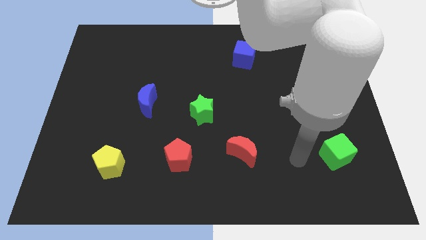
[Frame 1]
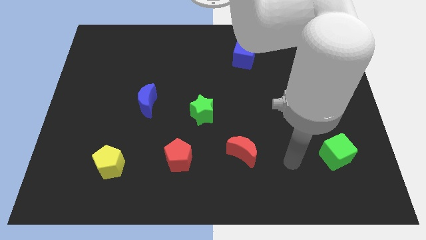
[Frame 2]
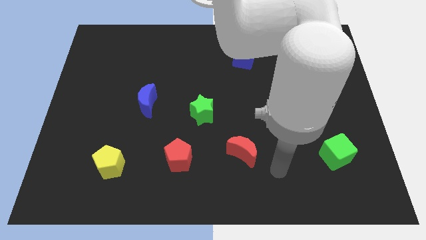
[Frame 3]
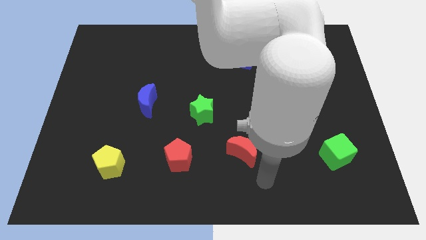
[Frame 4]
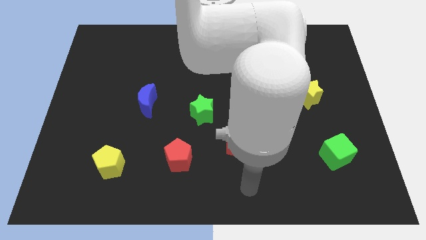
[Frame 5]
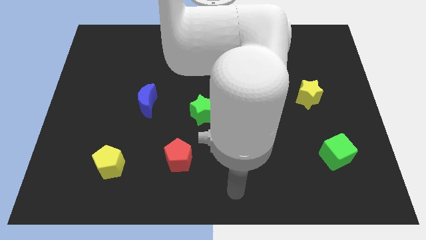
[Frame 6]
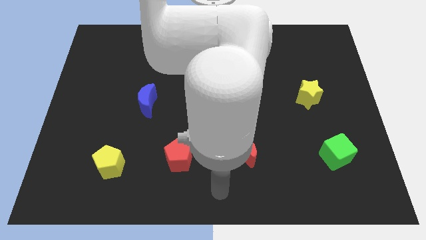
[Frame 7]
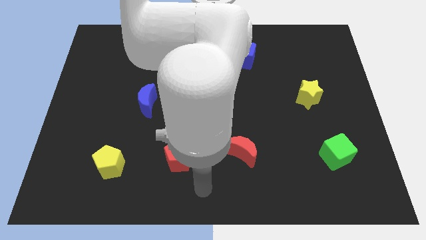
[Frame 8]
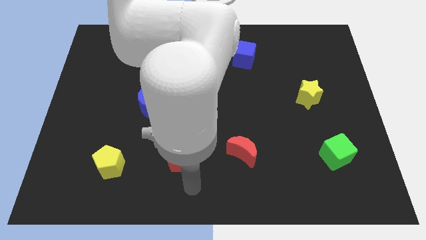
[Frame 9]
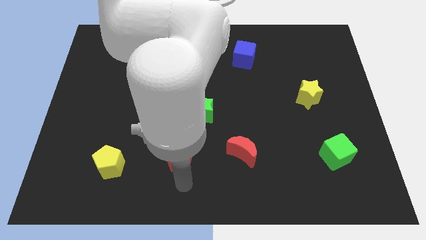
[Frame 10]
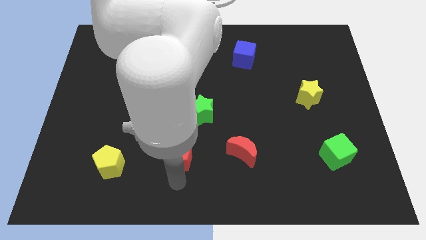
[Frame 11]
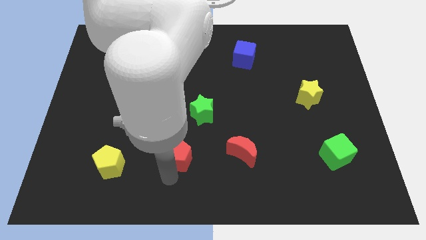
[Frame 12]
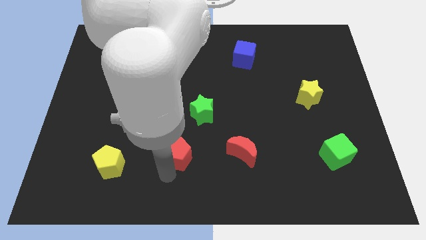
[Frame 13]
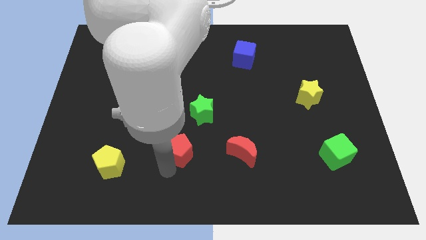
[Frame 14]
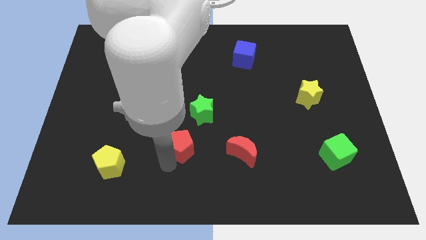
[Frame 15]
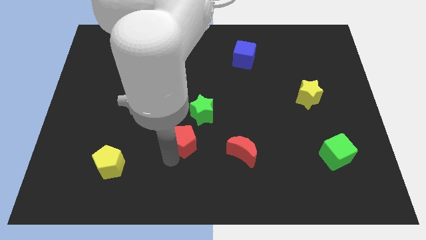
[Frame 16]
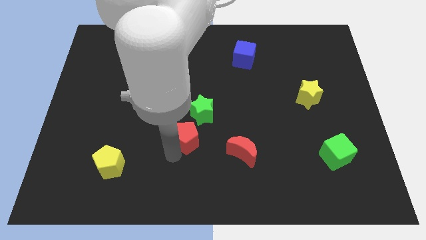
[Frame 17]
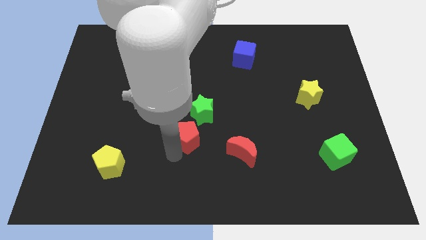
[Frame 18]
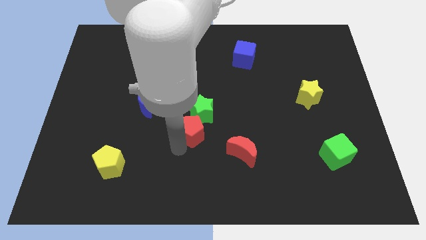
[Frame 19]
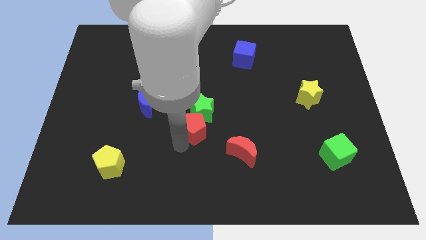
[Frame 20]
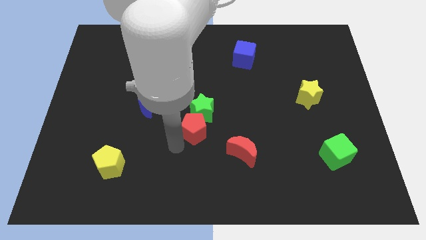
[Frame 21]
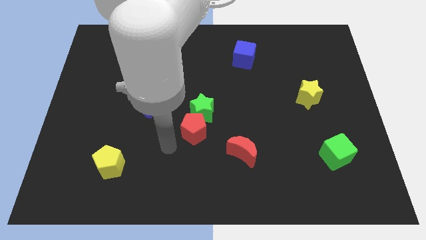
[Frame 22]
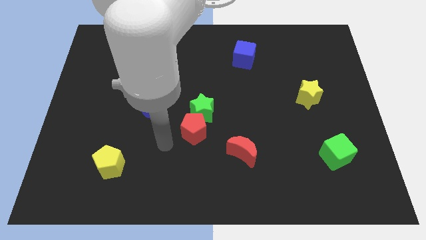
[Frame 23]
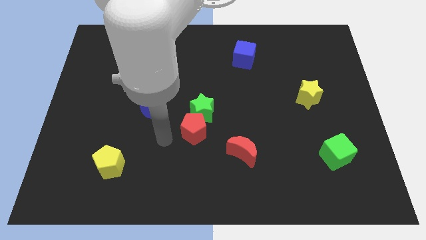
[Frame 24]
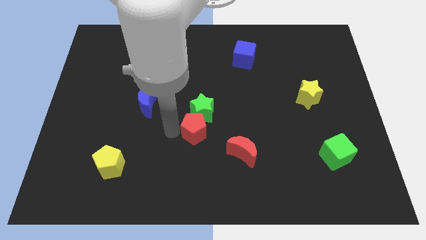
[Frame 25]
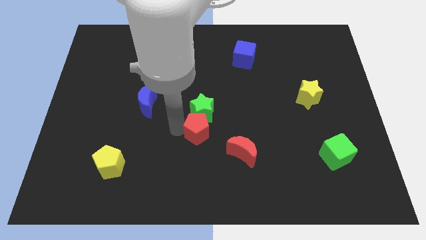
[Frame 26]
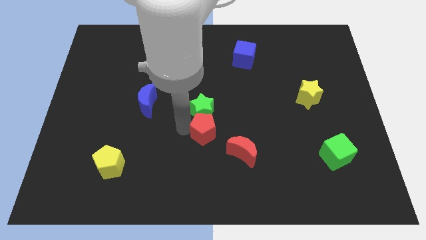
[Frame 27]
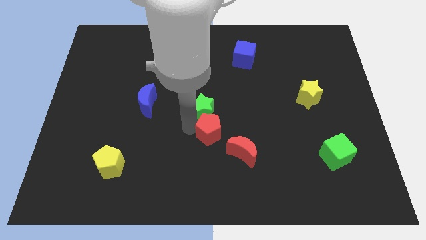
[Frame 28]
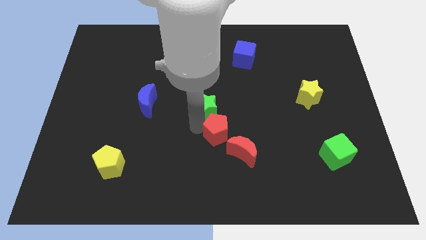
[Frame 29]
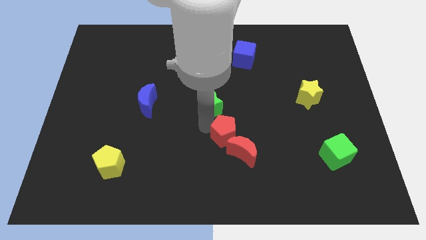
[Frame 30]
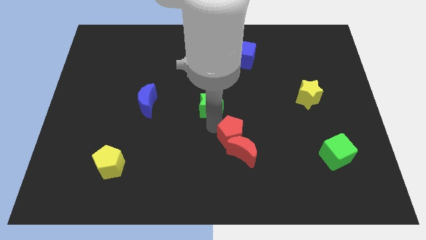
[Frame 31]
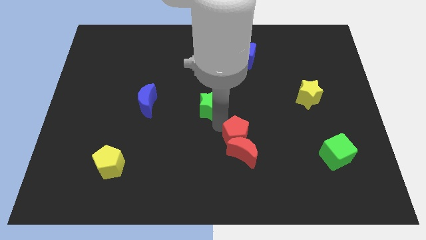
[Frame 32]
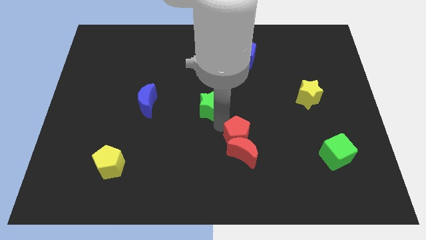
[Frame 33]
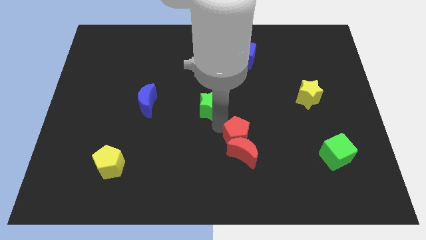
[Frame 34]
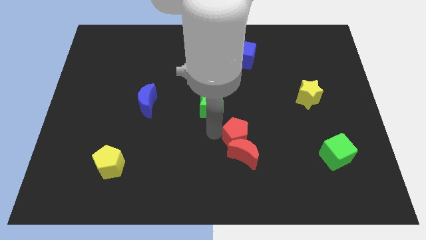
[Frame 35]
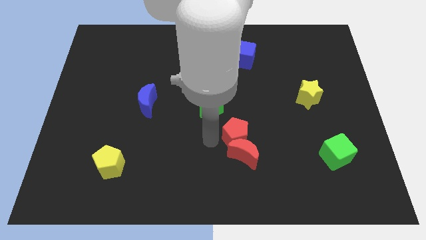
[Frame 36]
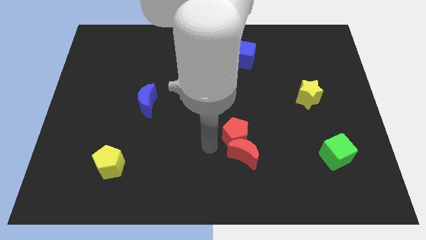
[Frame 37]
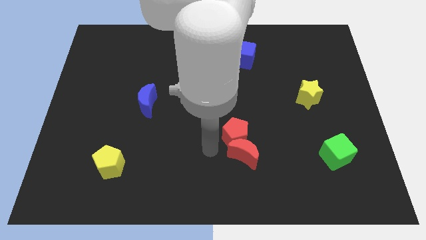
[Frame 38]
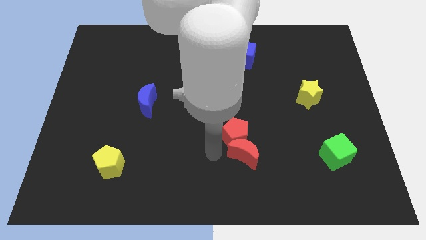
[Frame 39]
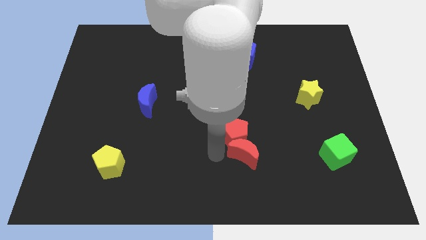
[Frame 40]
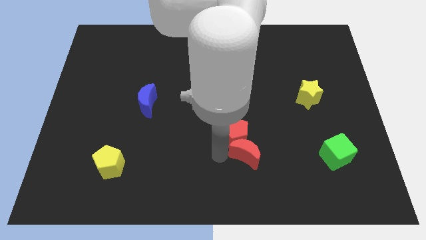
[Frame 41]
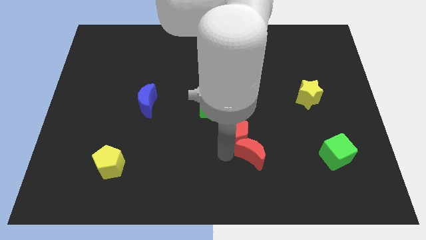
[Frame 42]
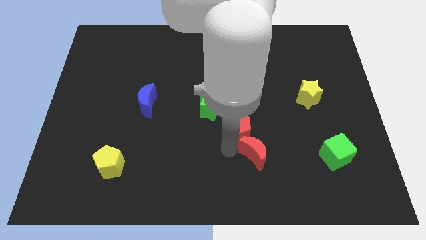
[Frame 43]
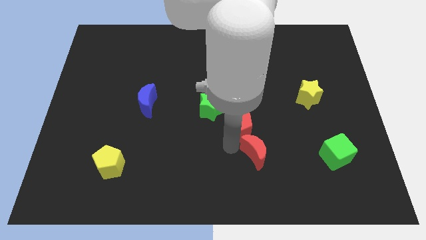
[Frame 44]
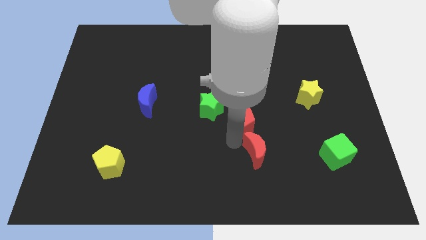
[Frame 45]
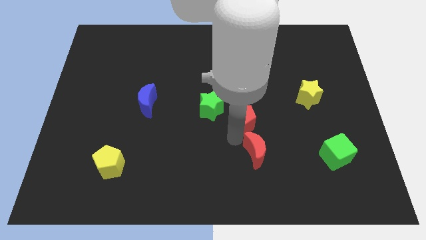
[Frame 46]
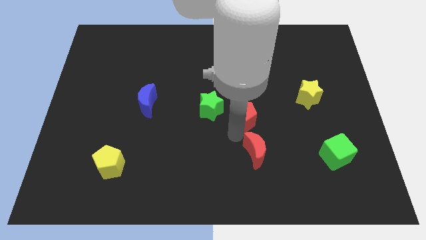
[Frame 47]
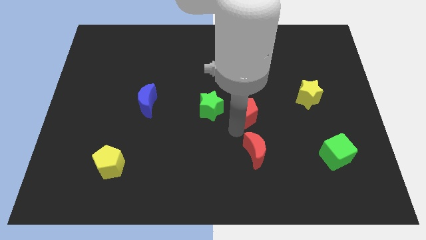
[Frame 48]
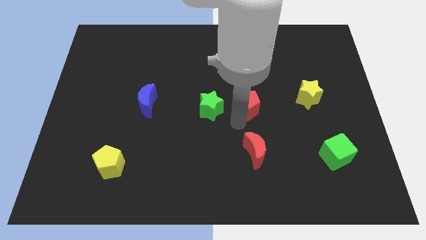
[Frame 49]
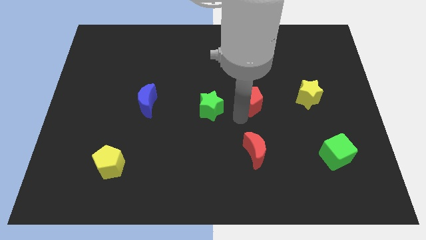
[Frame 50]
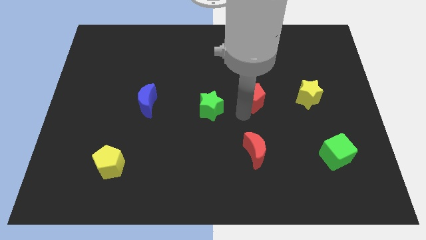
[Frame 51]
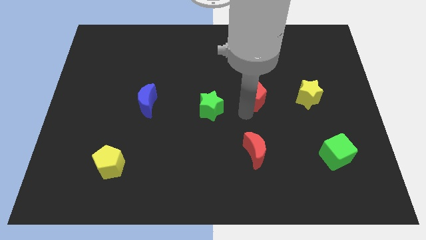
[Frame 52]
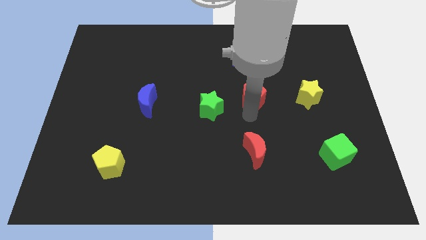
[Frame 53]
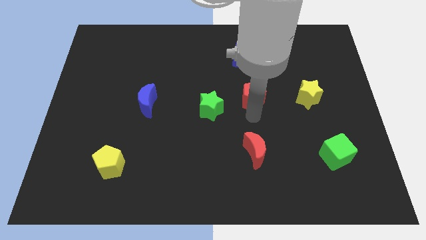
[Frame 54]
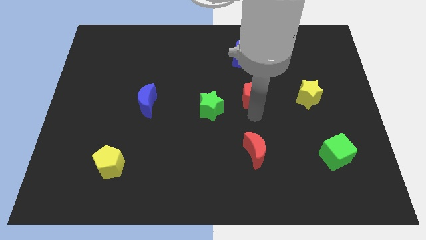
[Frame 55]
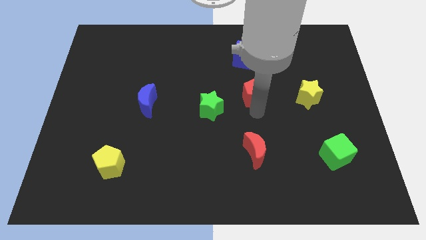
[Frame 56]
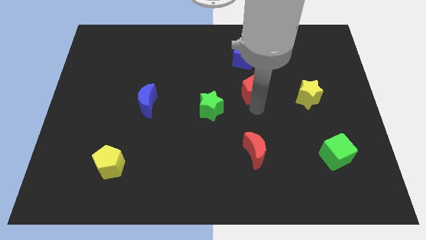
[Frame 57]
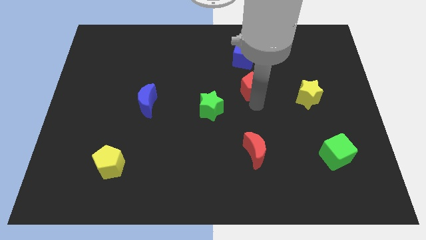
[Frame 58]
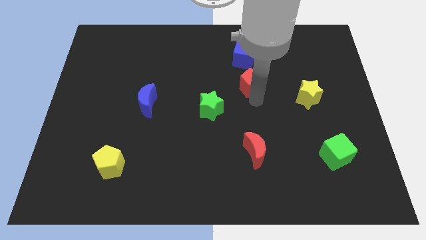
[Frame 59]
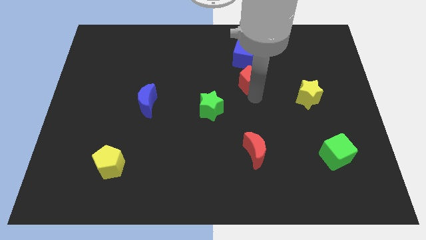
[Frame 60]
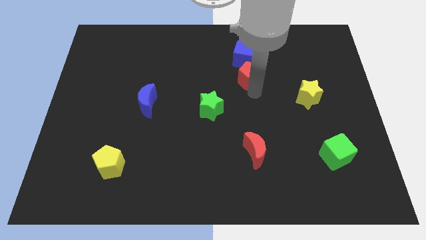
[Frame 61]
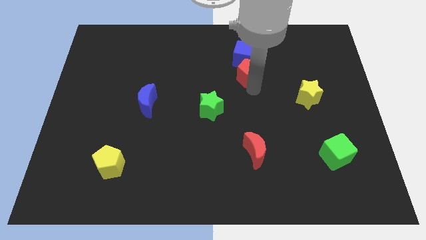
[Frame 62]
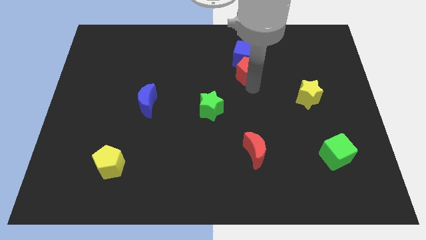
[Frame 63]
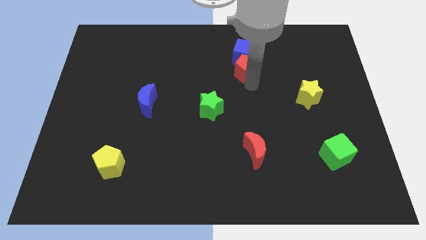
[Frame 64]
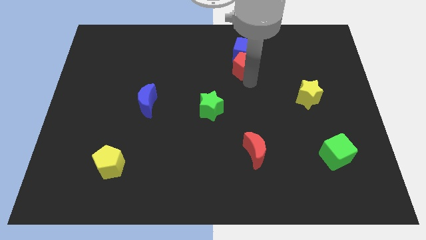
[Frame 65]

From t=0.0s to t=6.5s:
slide the red pentagon towards the blue cube

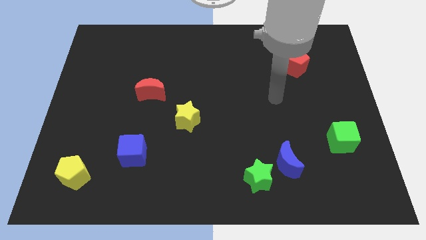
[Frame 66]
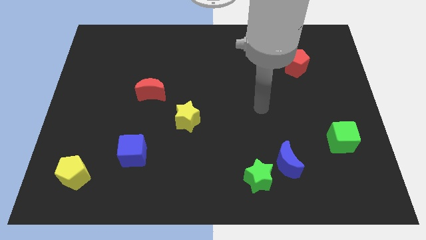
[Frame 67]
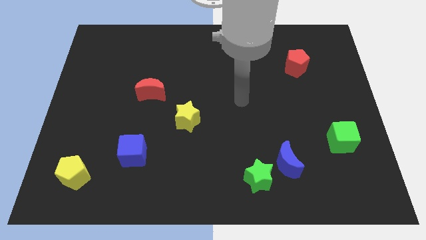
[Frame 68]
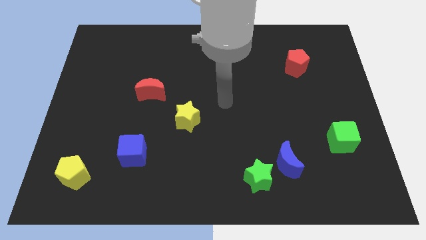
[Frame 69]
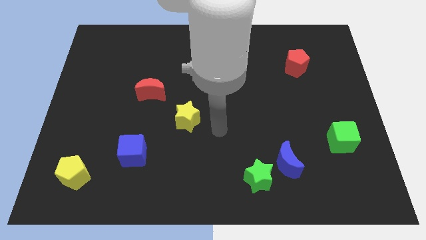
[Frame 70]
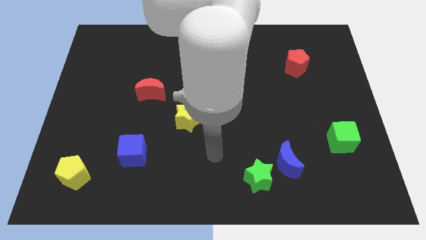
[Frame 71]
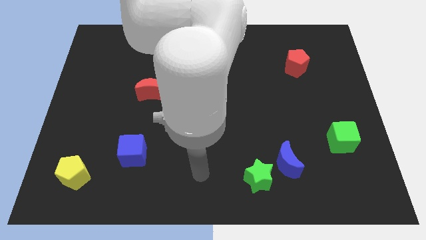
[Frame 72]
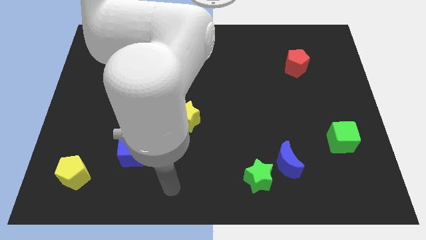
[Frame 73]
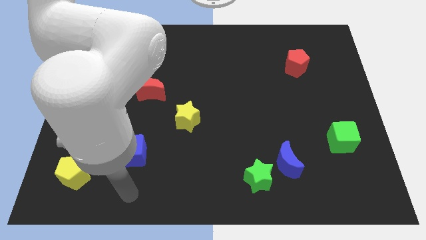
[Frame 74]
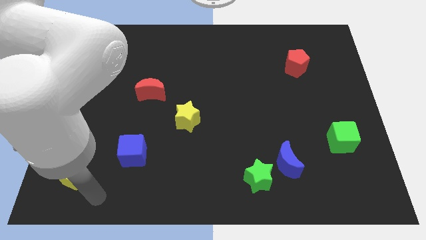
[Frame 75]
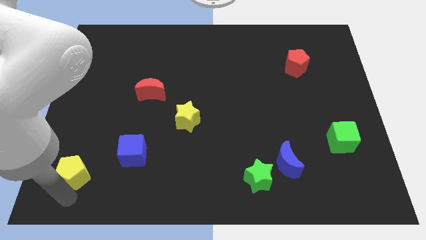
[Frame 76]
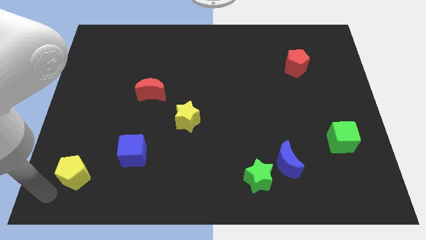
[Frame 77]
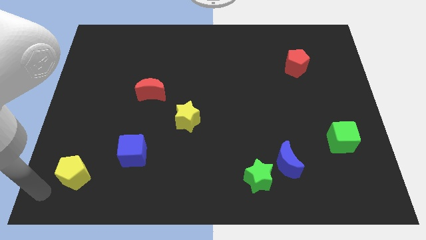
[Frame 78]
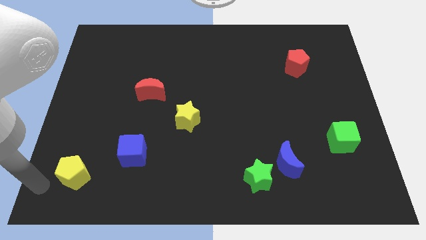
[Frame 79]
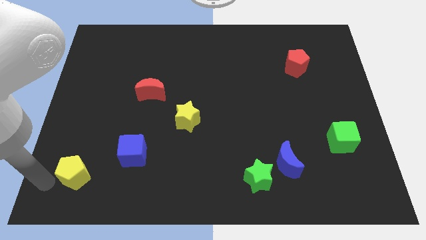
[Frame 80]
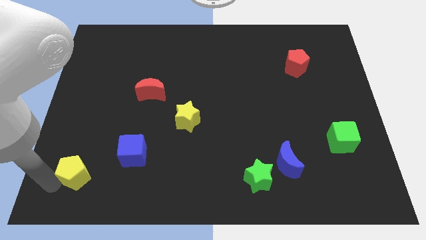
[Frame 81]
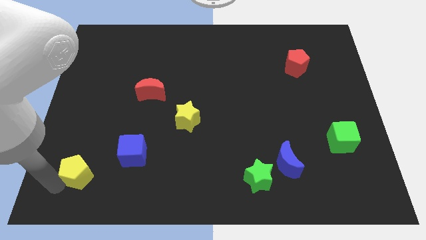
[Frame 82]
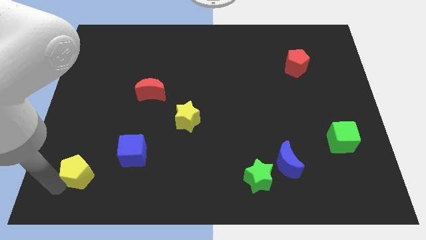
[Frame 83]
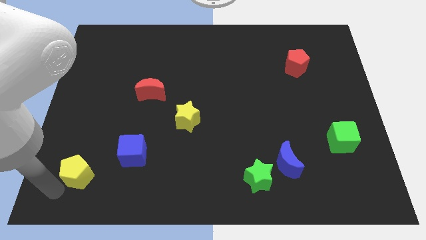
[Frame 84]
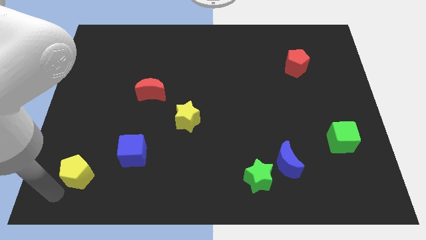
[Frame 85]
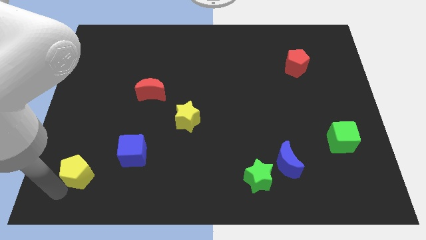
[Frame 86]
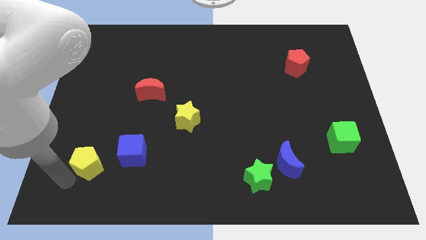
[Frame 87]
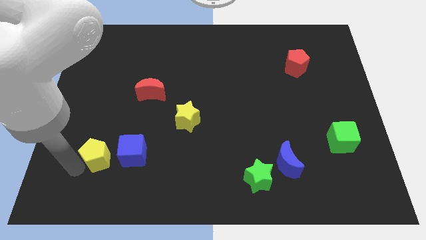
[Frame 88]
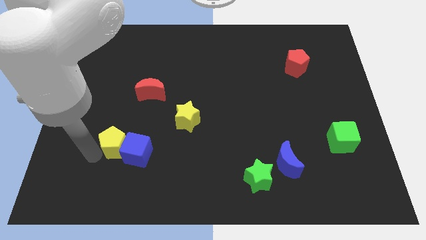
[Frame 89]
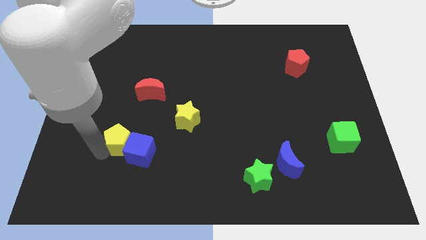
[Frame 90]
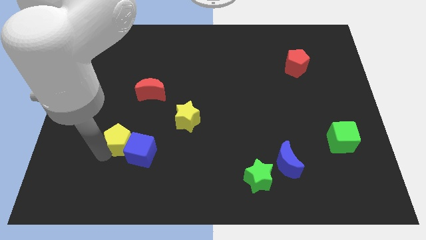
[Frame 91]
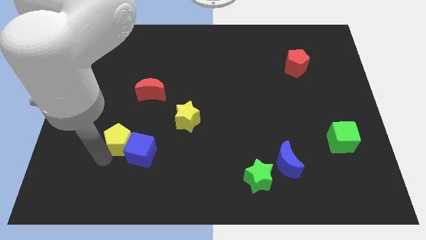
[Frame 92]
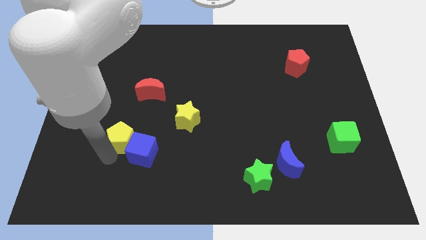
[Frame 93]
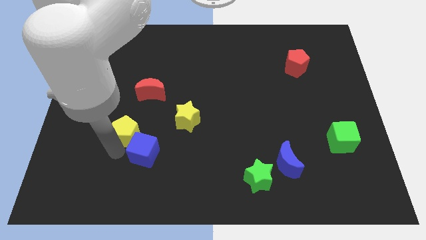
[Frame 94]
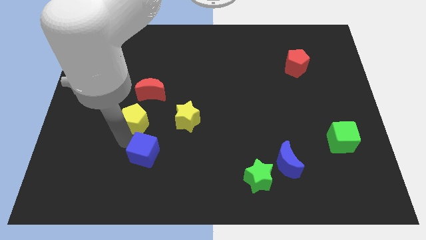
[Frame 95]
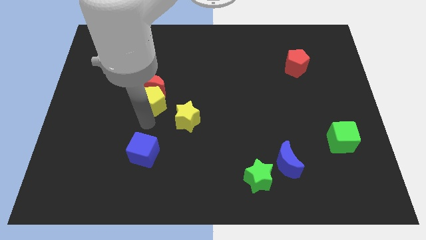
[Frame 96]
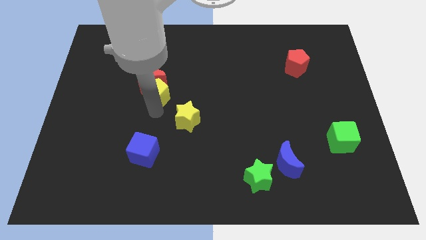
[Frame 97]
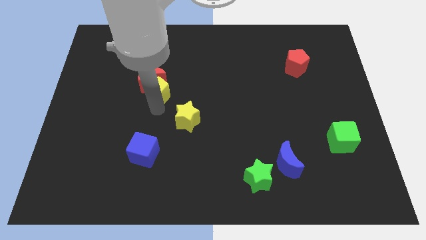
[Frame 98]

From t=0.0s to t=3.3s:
push the yellow pentagon close to the red moon
